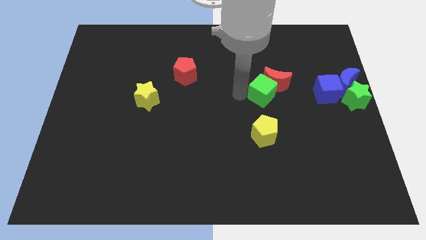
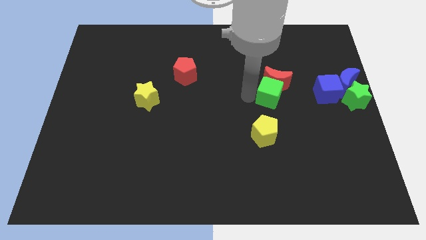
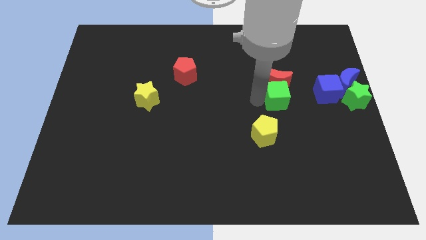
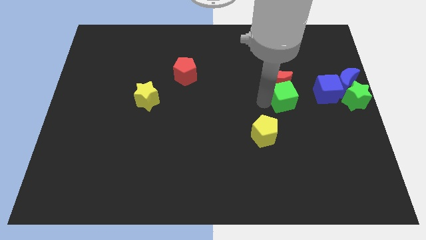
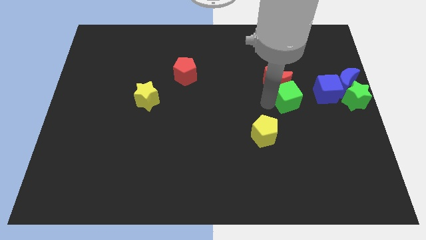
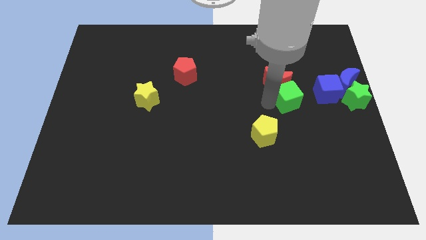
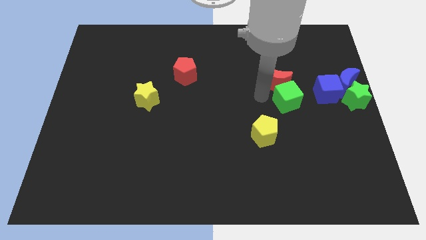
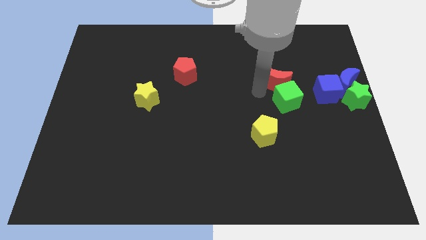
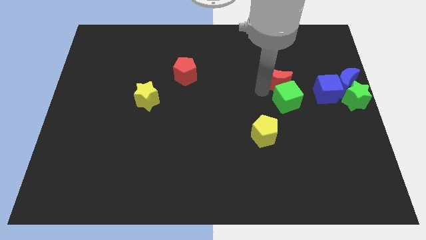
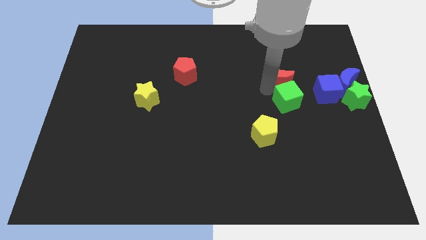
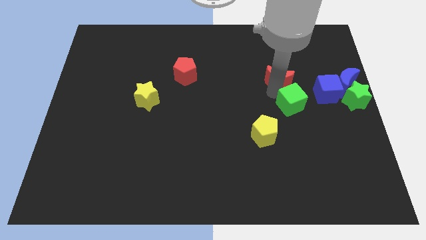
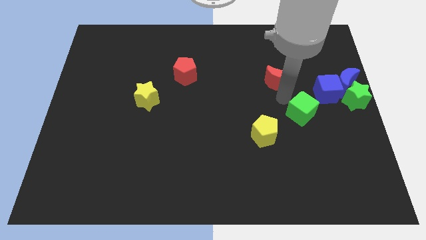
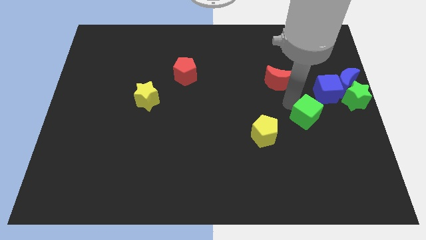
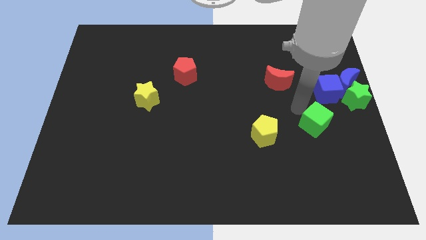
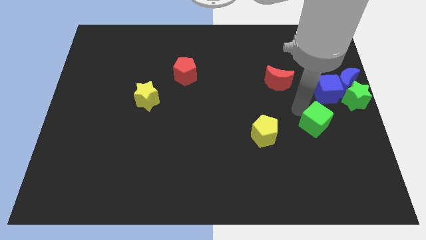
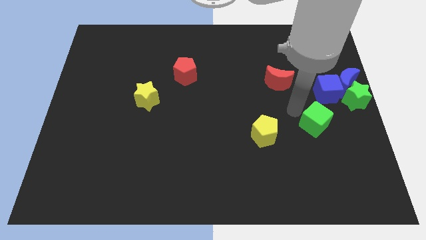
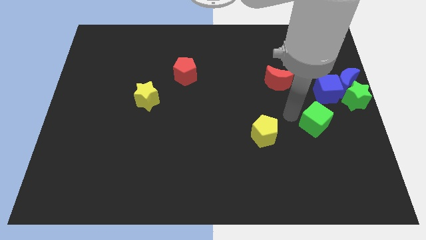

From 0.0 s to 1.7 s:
separate the green cube from the red moon

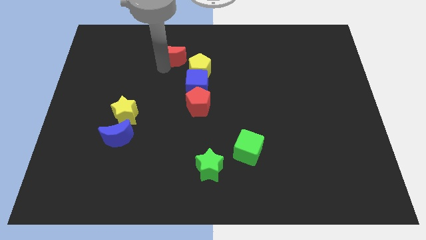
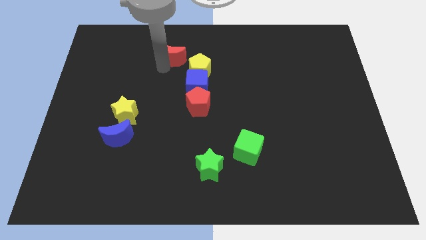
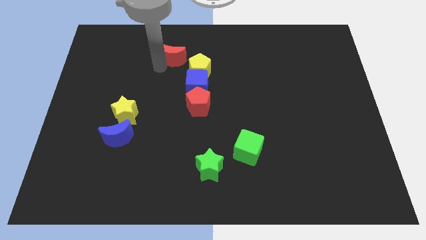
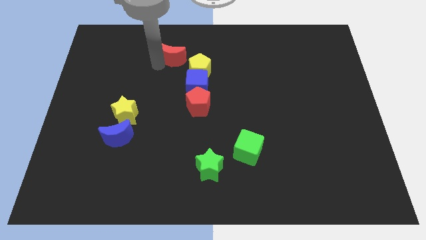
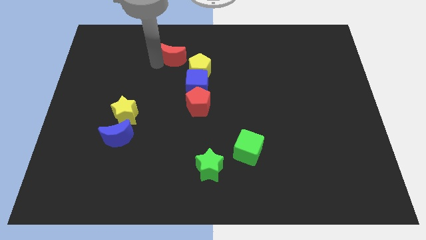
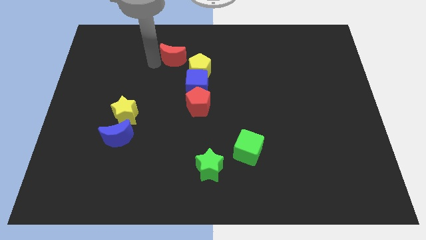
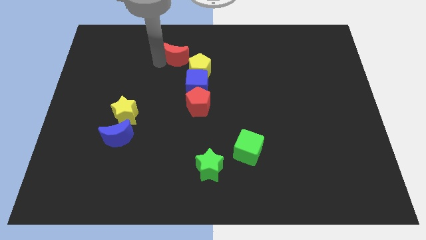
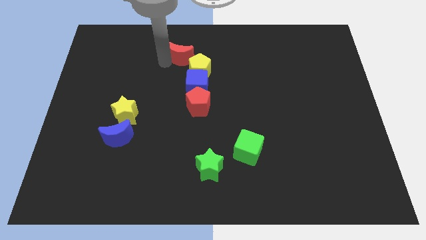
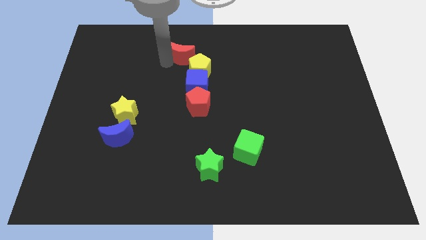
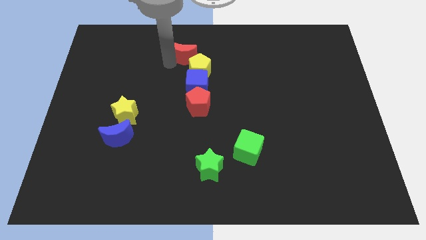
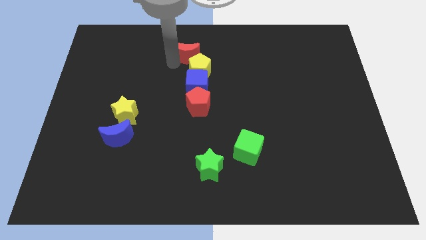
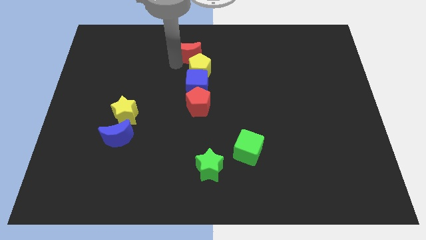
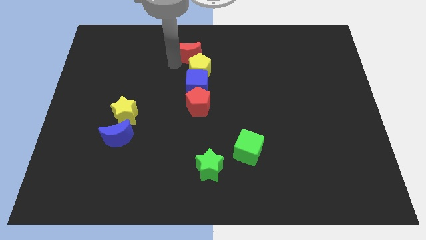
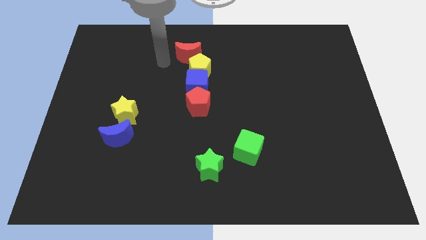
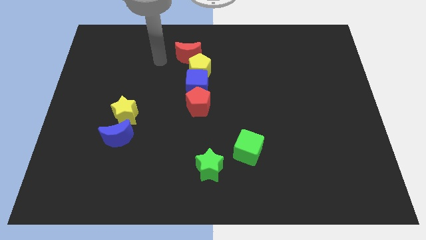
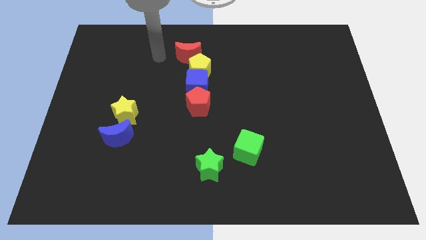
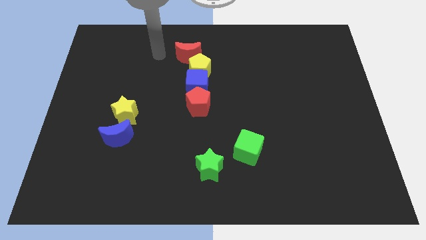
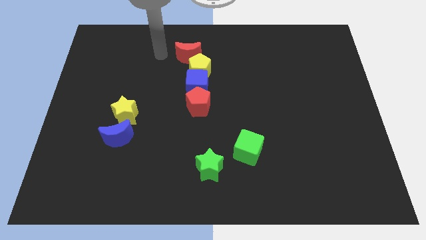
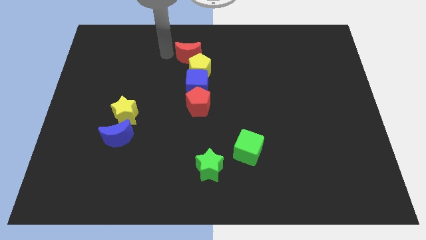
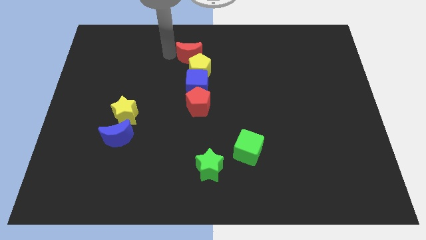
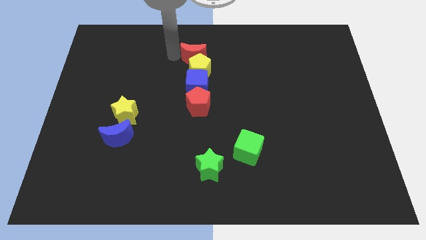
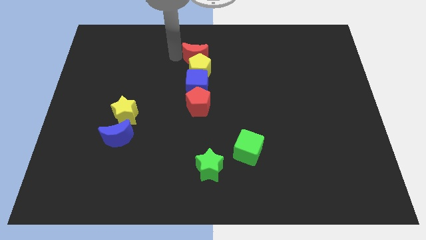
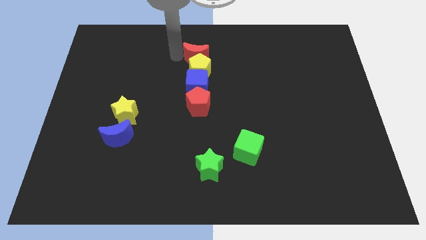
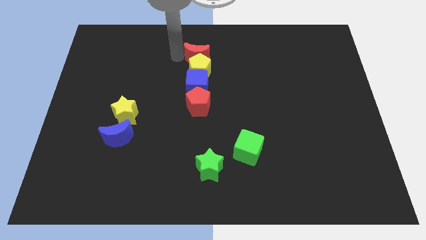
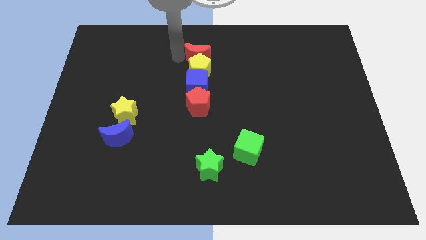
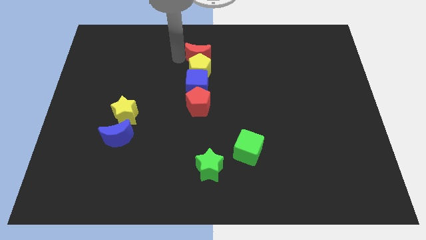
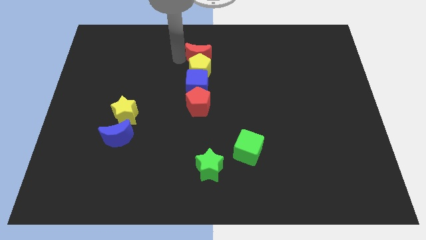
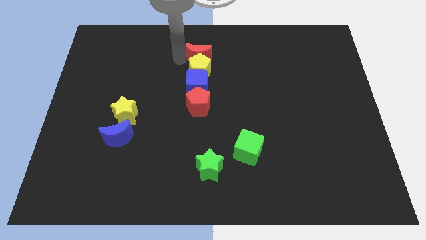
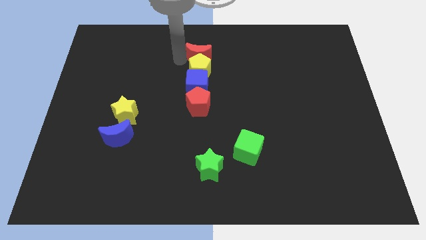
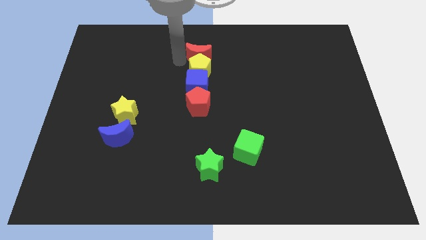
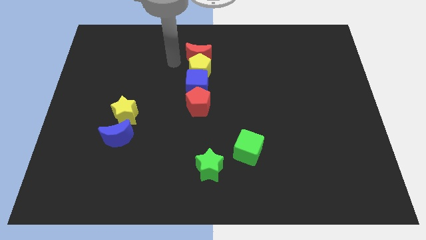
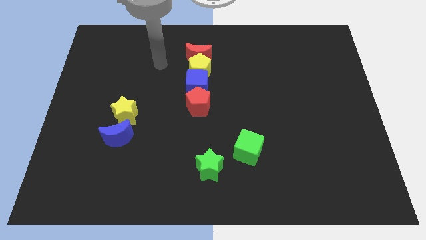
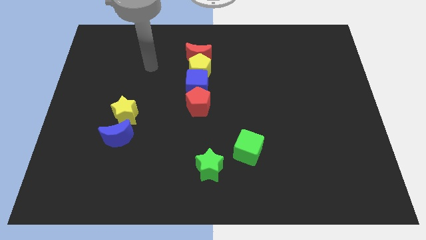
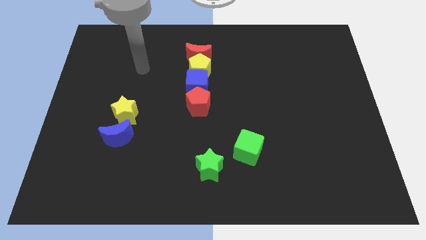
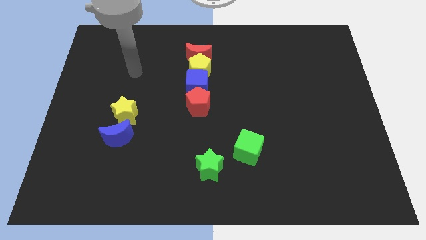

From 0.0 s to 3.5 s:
place the red moon above the yellow pentagon

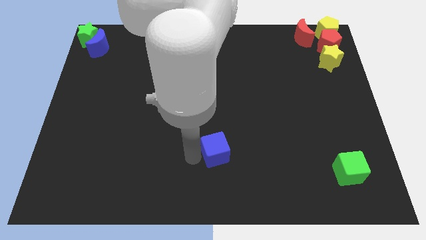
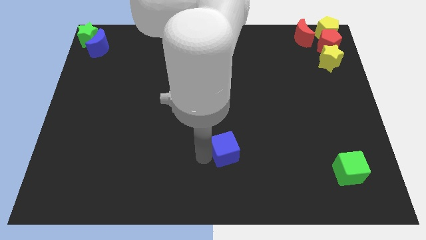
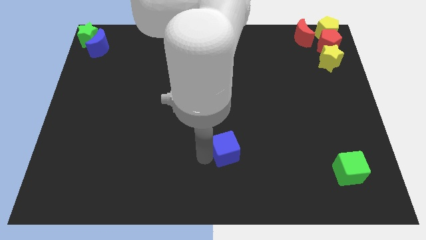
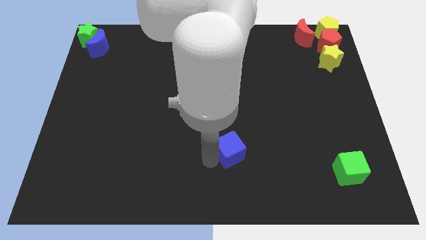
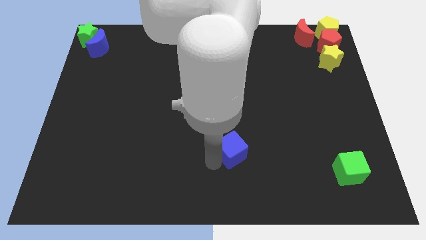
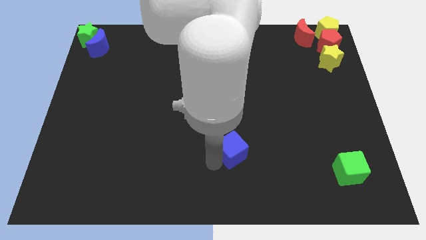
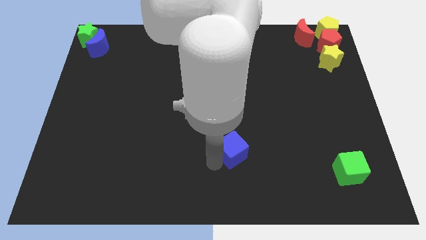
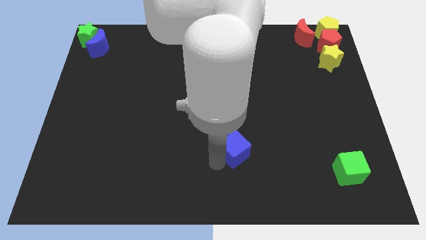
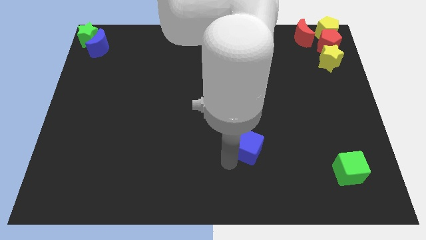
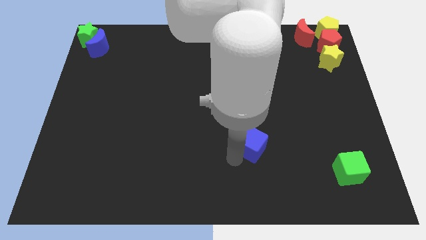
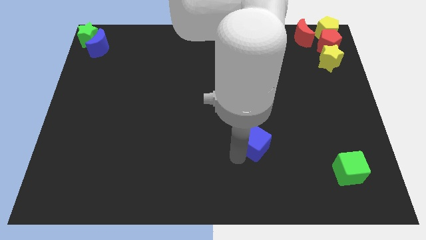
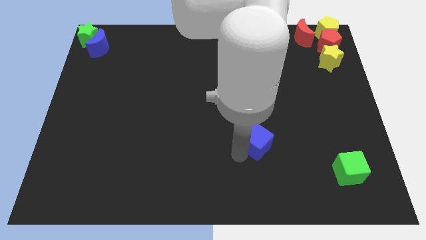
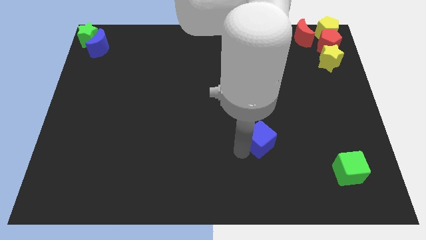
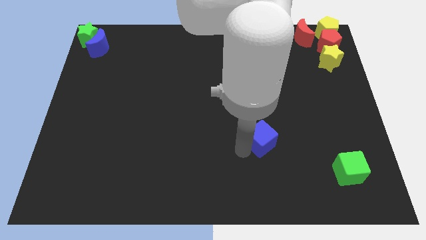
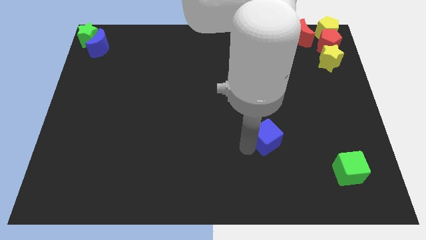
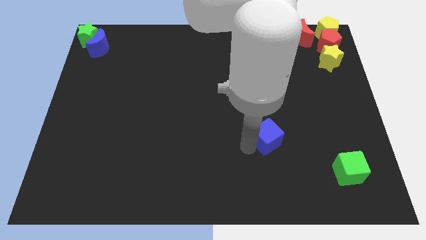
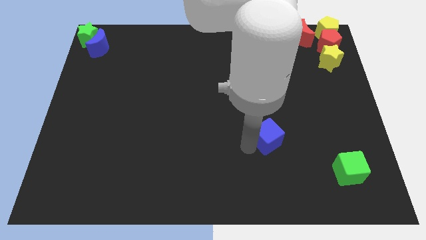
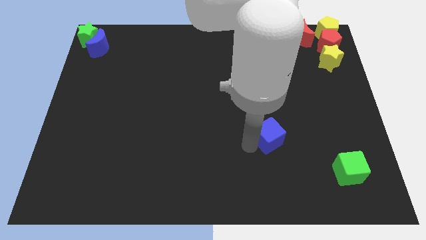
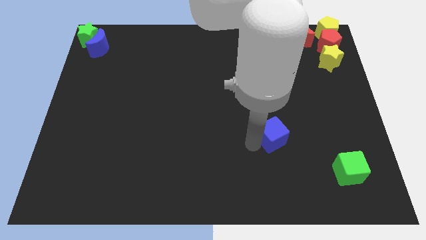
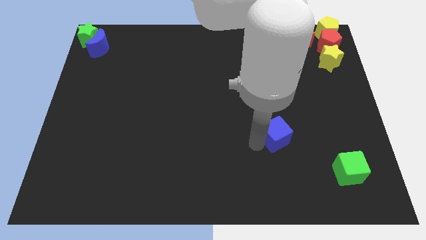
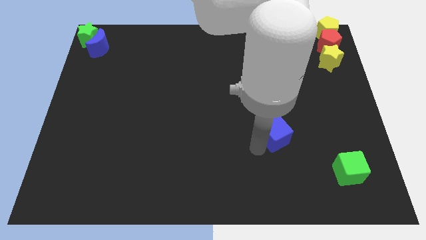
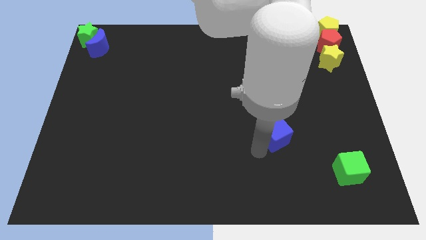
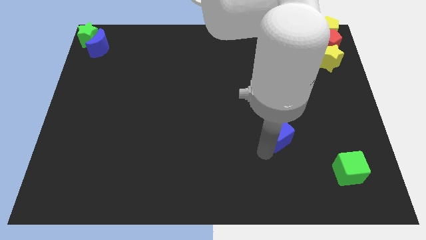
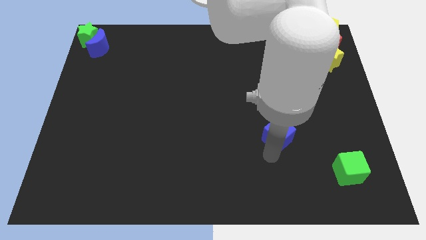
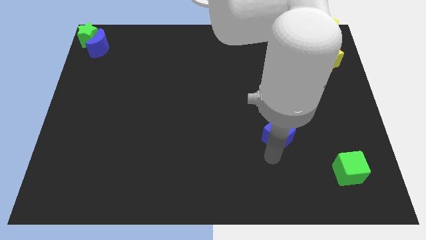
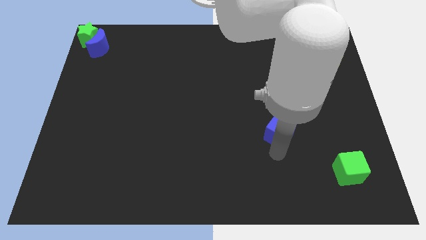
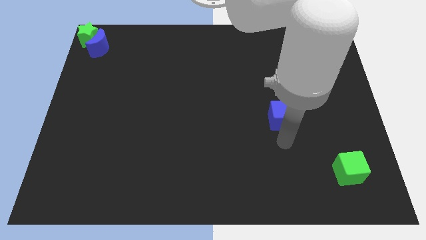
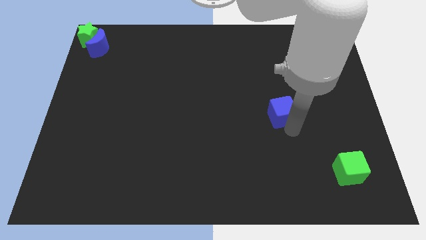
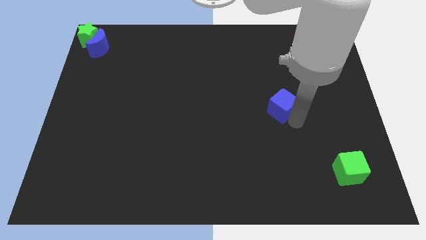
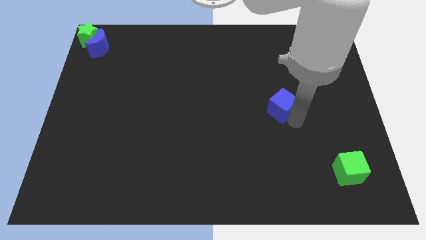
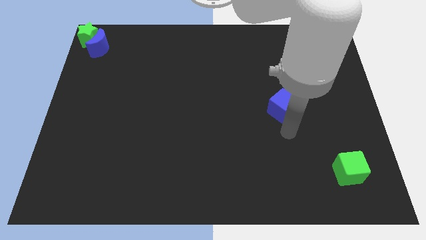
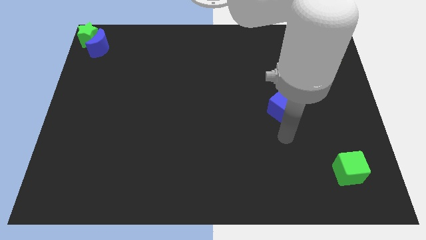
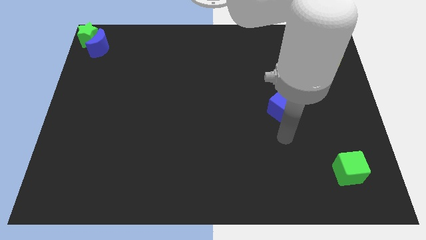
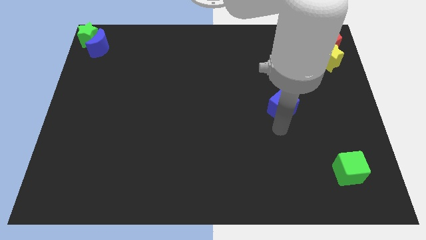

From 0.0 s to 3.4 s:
slightly move the blue cube towards the top right of the board

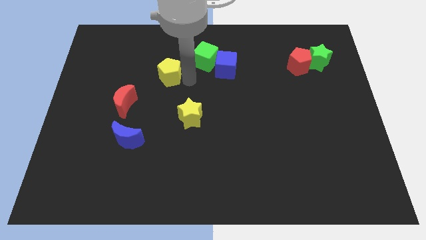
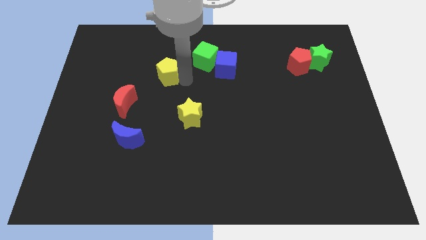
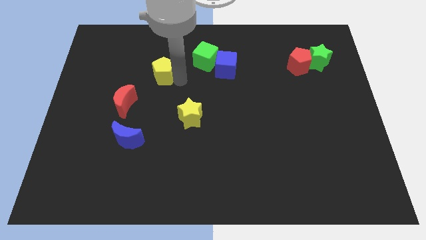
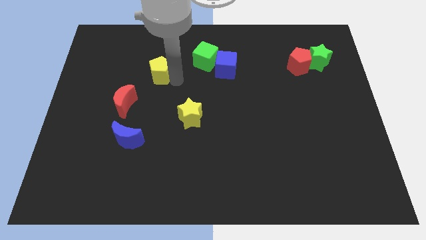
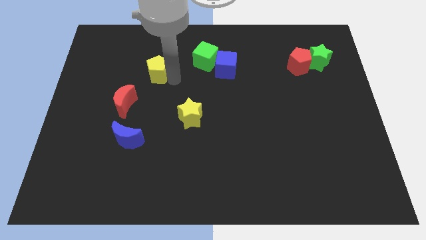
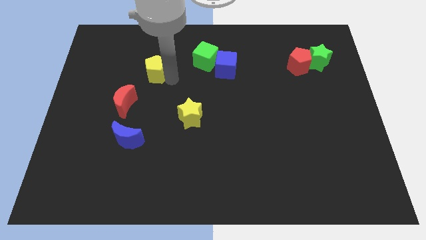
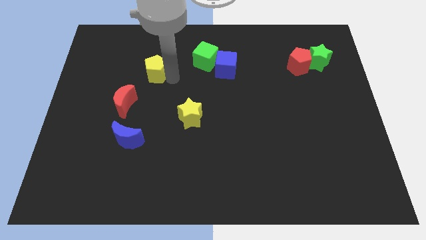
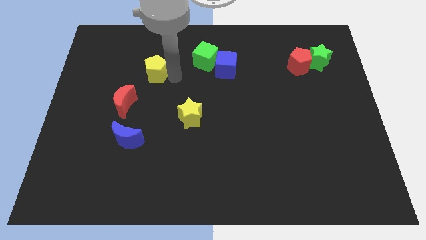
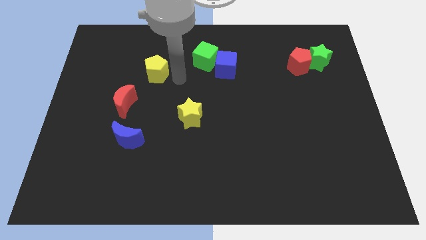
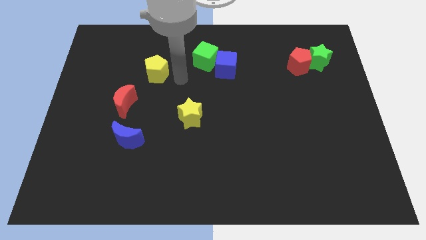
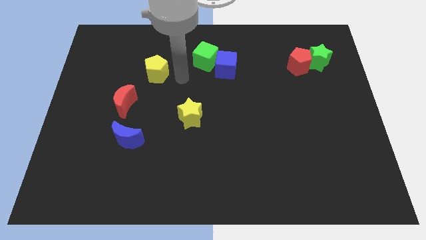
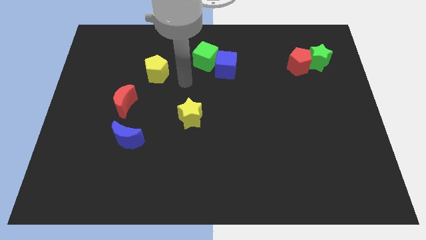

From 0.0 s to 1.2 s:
move yellow pentagon on left
